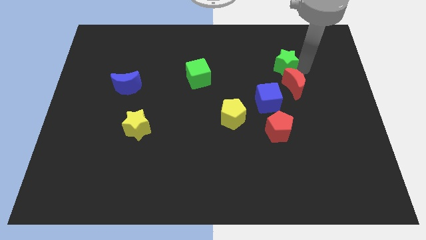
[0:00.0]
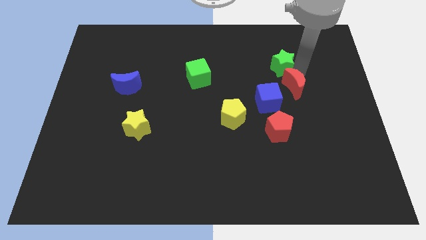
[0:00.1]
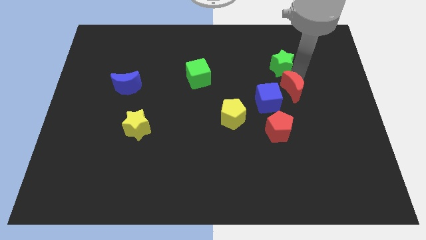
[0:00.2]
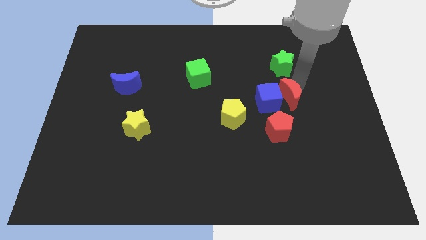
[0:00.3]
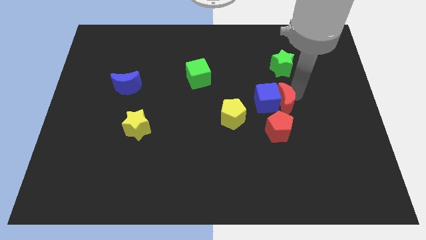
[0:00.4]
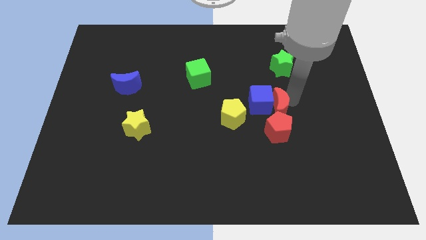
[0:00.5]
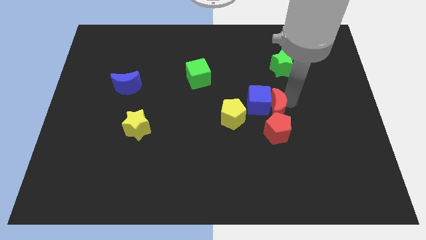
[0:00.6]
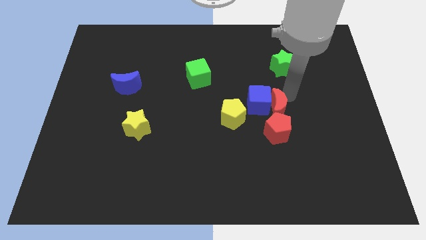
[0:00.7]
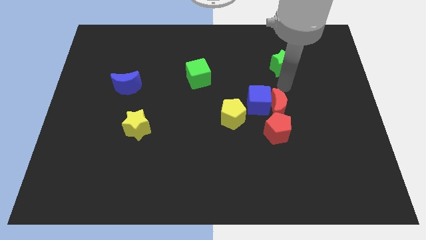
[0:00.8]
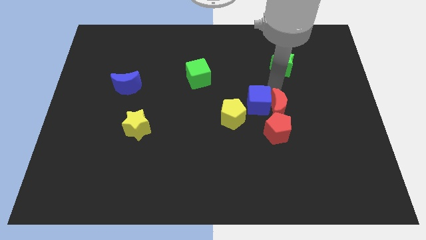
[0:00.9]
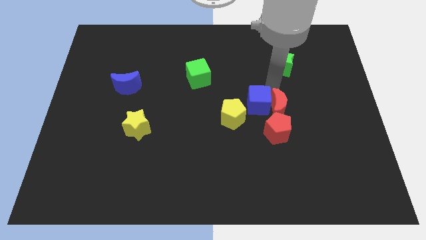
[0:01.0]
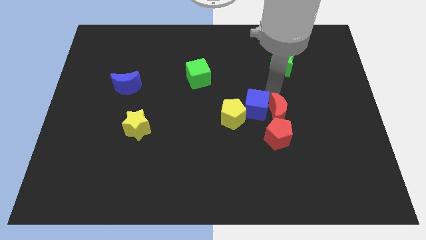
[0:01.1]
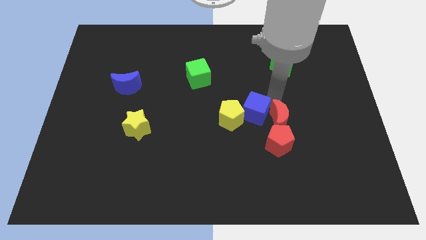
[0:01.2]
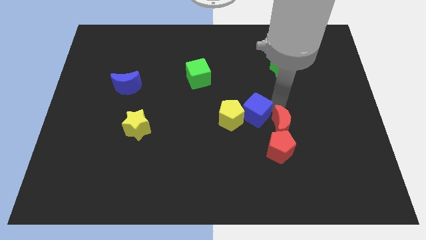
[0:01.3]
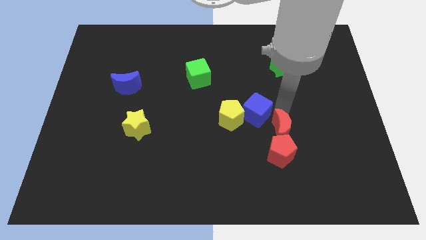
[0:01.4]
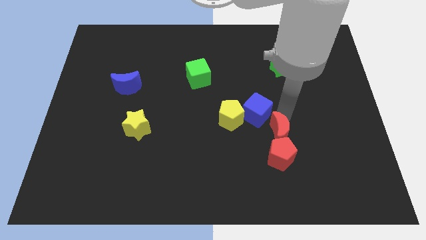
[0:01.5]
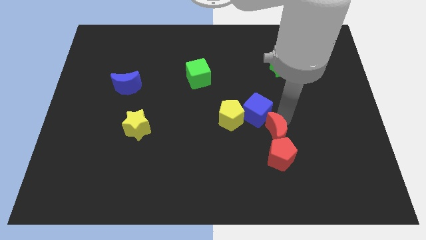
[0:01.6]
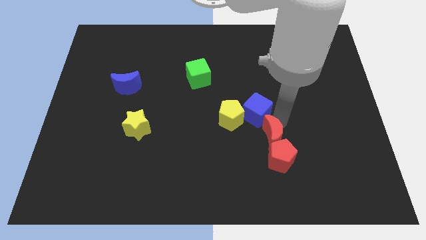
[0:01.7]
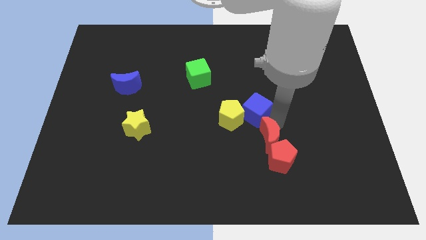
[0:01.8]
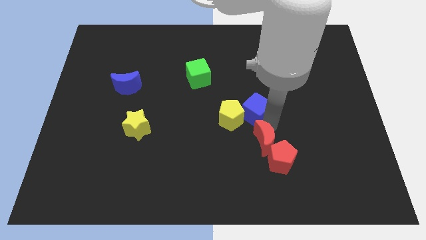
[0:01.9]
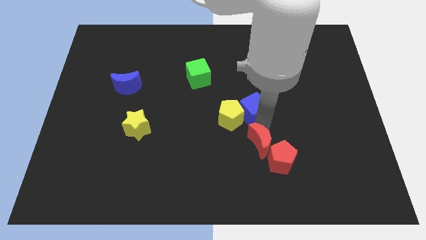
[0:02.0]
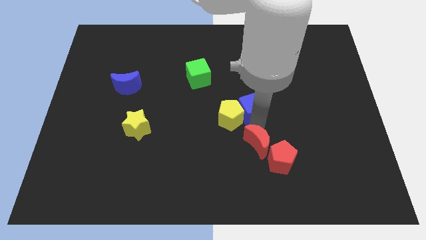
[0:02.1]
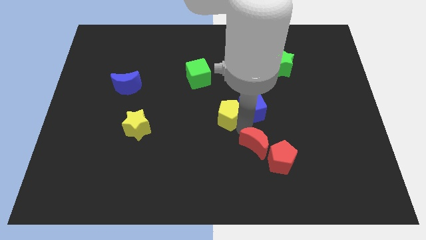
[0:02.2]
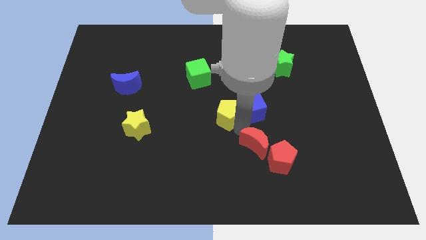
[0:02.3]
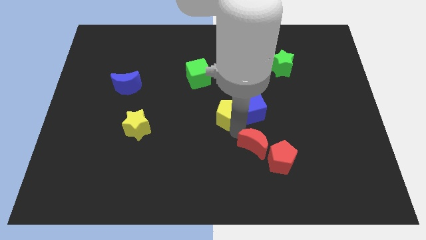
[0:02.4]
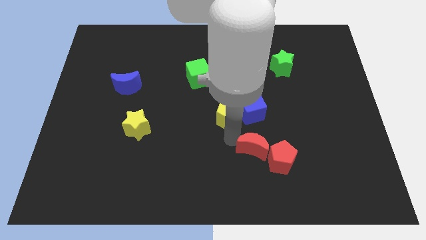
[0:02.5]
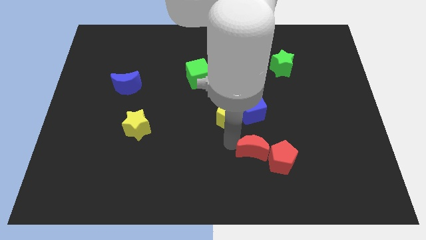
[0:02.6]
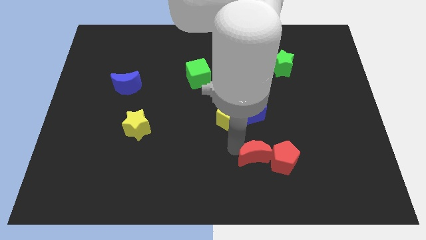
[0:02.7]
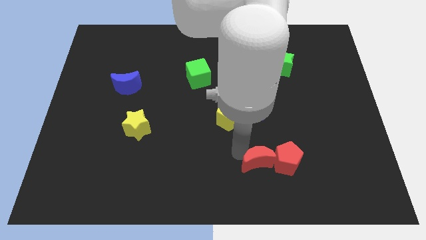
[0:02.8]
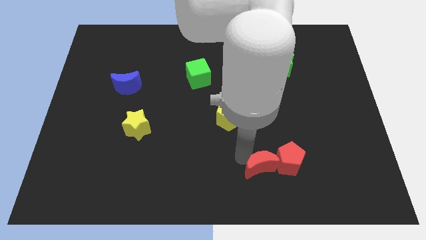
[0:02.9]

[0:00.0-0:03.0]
move the red crescent to the left of the red pentagon

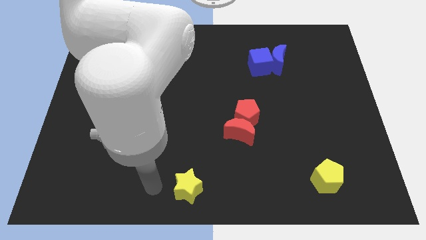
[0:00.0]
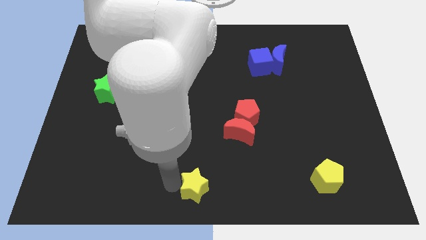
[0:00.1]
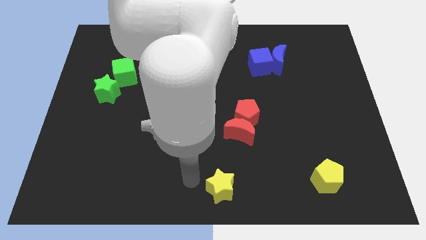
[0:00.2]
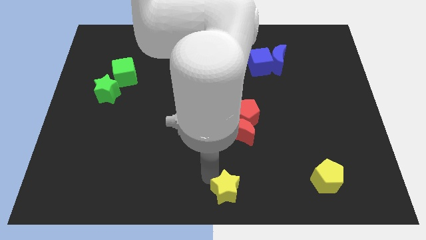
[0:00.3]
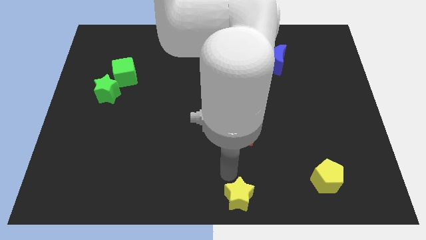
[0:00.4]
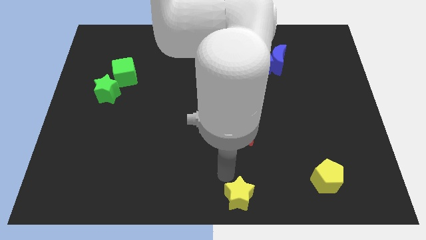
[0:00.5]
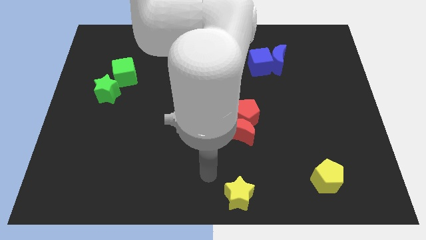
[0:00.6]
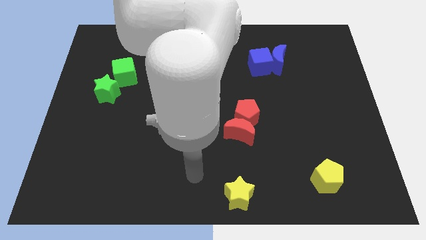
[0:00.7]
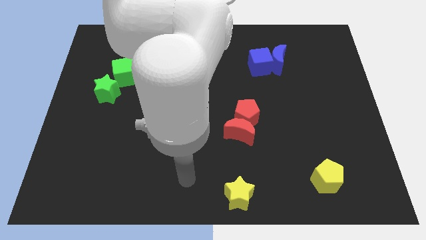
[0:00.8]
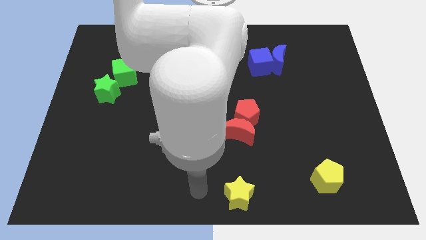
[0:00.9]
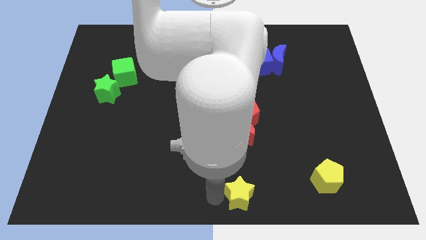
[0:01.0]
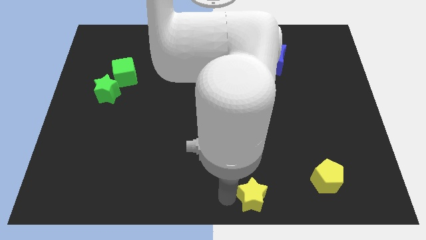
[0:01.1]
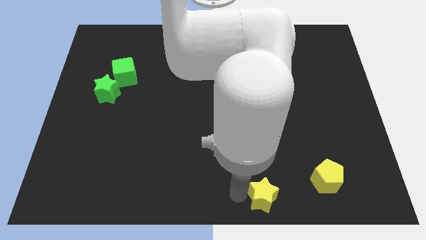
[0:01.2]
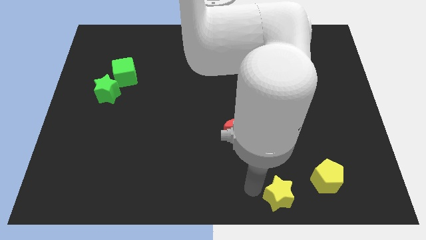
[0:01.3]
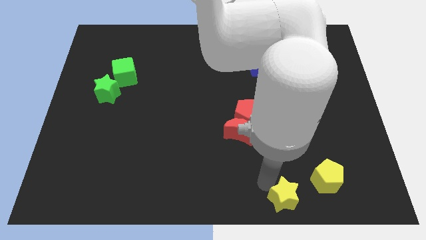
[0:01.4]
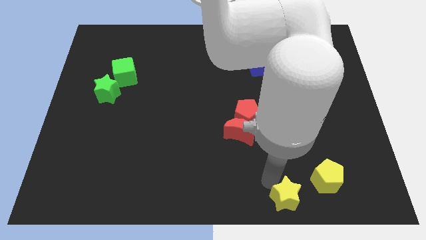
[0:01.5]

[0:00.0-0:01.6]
move the yellow star close right to the yellow pentagon

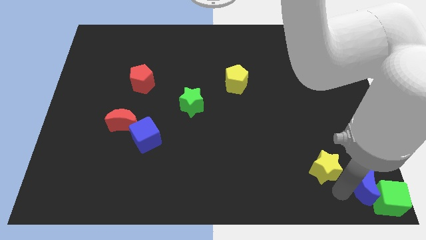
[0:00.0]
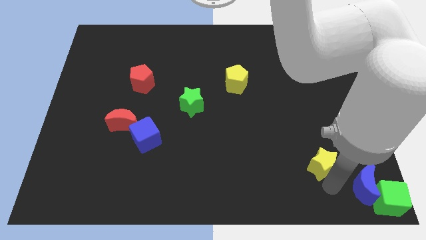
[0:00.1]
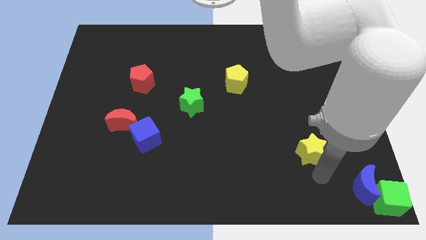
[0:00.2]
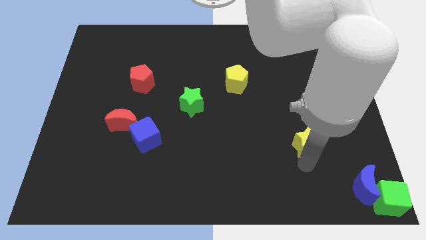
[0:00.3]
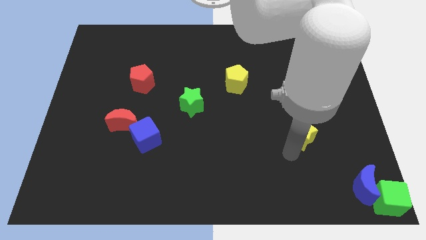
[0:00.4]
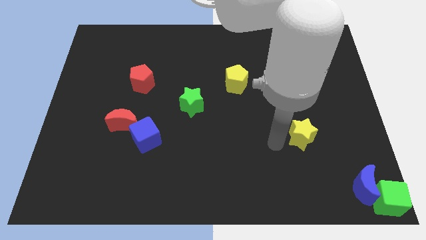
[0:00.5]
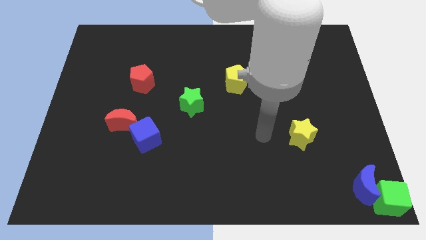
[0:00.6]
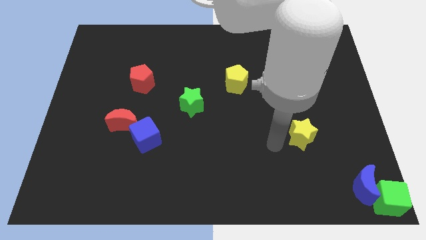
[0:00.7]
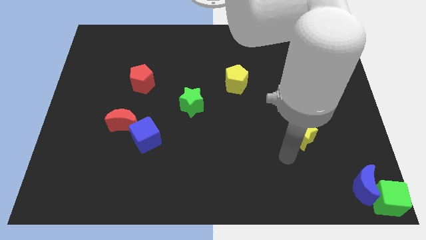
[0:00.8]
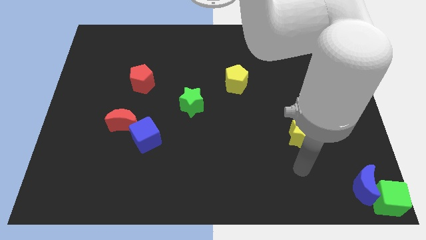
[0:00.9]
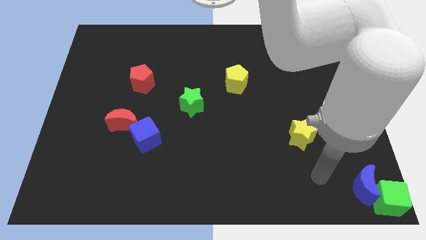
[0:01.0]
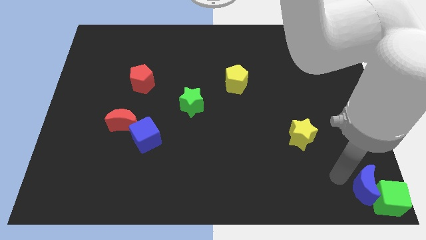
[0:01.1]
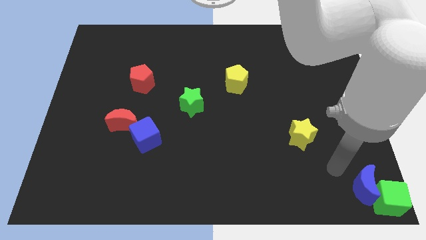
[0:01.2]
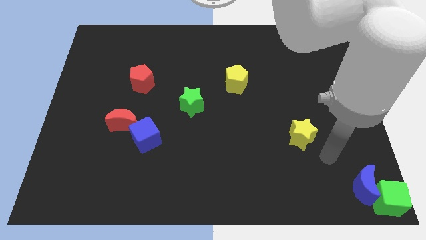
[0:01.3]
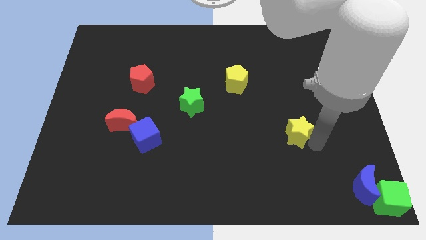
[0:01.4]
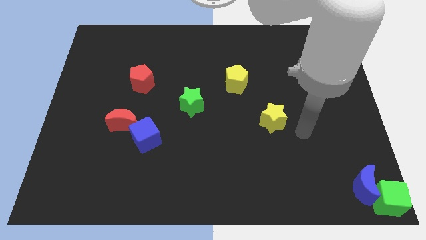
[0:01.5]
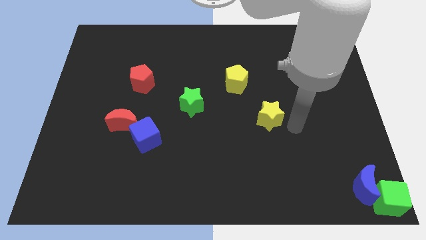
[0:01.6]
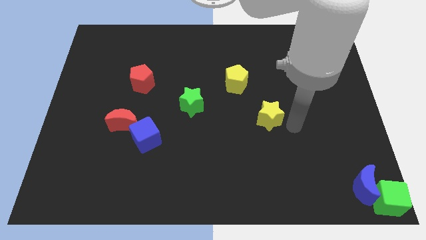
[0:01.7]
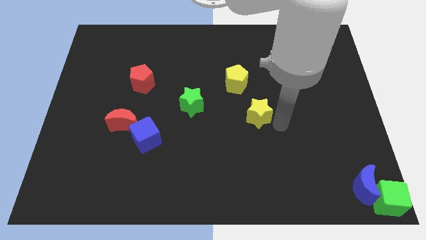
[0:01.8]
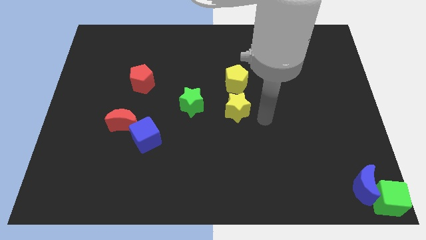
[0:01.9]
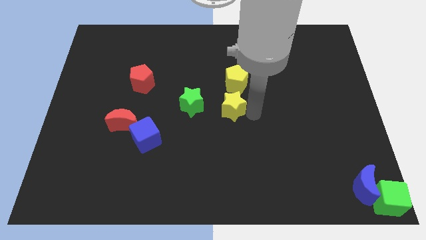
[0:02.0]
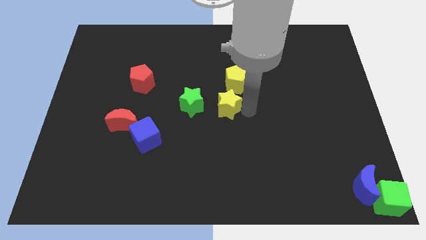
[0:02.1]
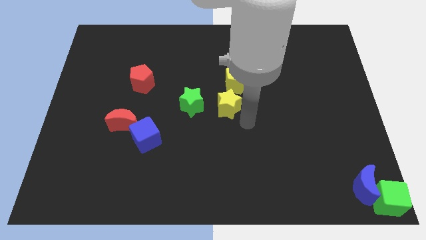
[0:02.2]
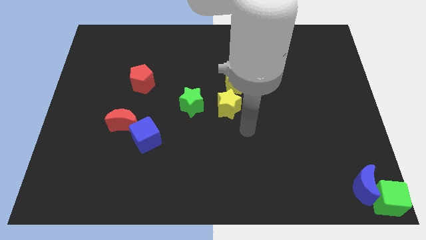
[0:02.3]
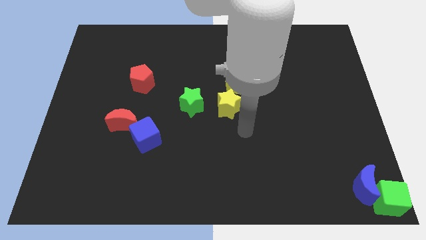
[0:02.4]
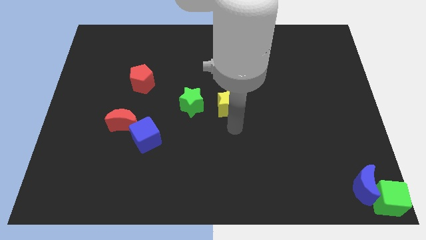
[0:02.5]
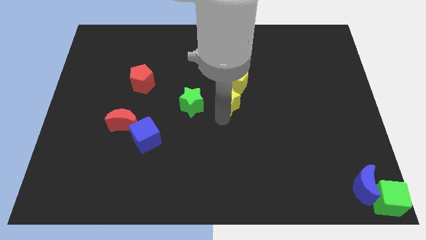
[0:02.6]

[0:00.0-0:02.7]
place the yellow star below the yellow pentagon

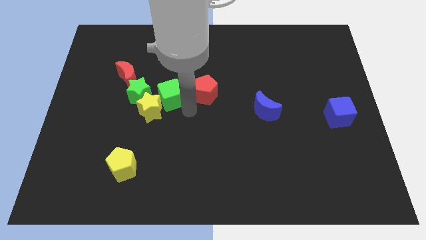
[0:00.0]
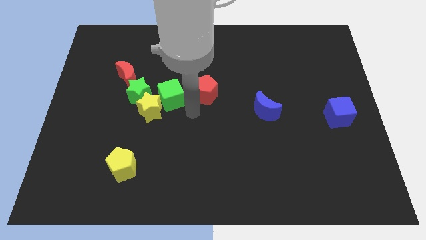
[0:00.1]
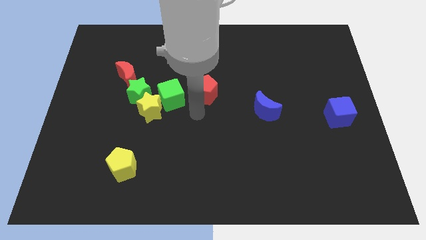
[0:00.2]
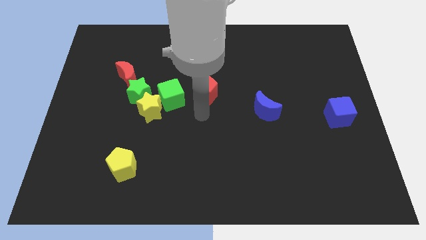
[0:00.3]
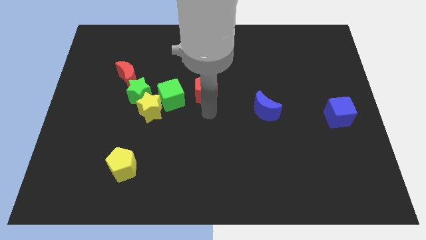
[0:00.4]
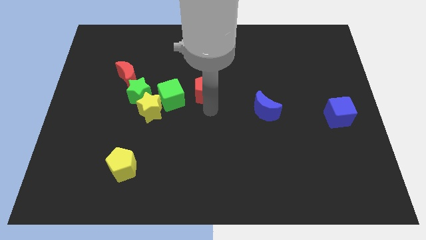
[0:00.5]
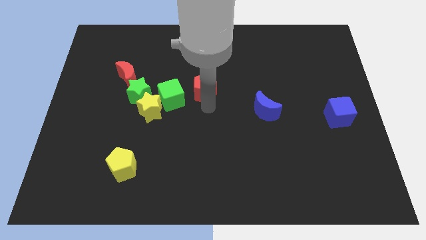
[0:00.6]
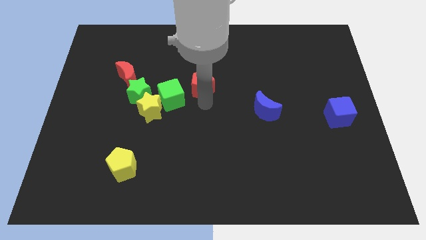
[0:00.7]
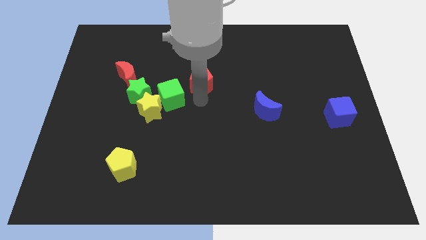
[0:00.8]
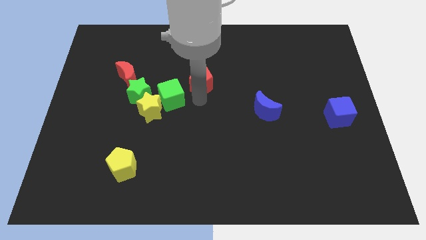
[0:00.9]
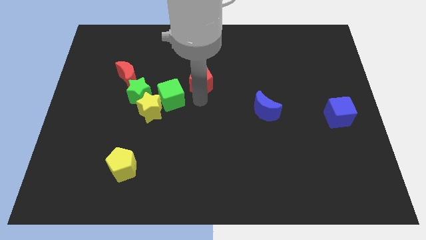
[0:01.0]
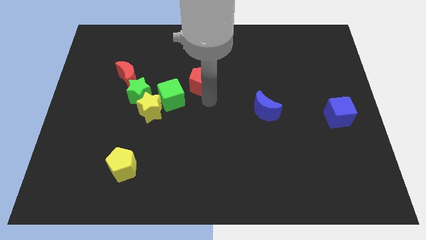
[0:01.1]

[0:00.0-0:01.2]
slightly push the red pentagon towards the top of the board

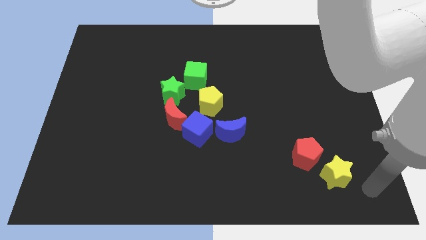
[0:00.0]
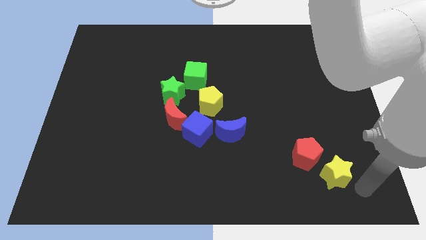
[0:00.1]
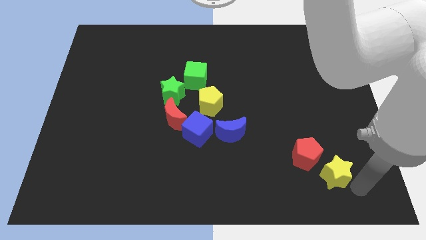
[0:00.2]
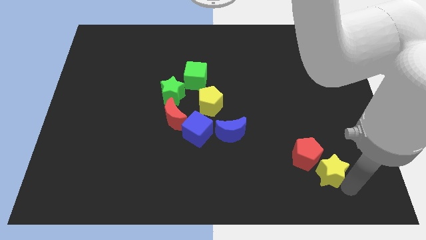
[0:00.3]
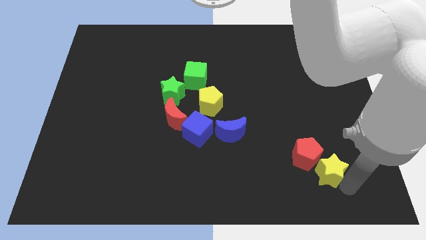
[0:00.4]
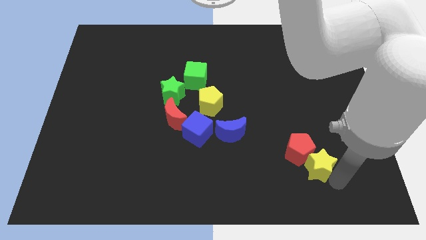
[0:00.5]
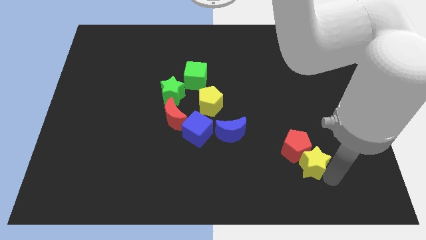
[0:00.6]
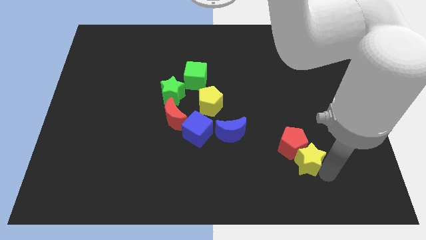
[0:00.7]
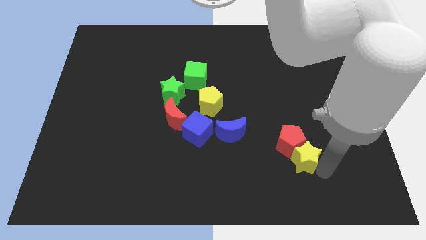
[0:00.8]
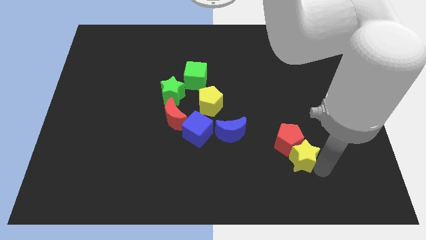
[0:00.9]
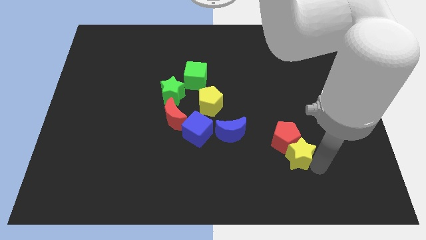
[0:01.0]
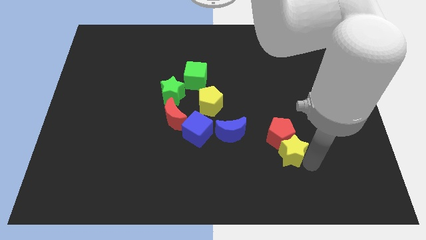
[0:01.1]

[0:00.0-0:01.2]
move the yellow star and the red pentagon to the center of the board
